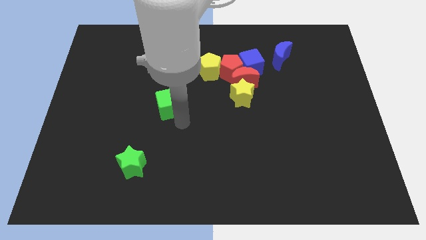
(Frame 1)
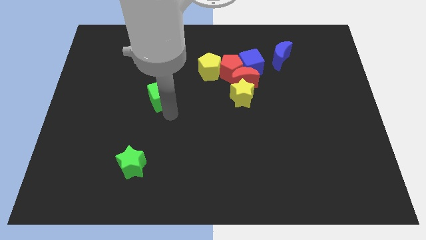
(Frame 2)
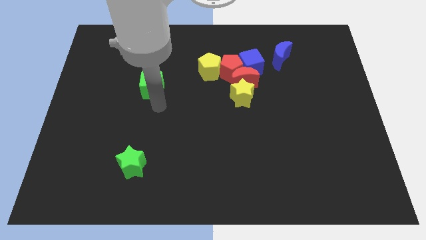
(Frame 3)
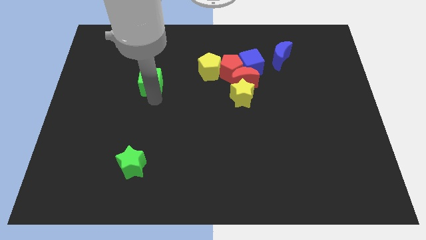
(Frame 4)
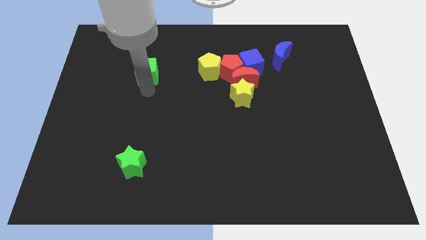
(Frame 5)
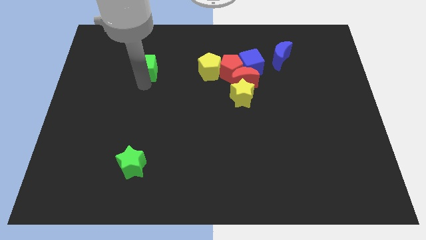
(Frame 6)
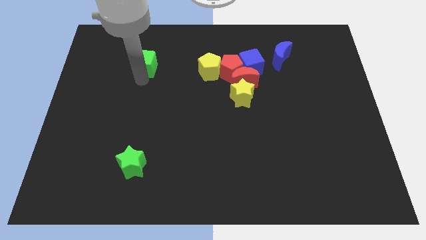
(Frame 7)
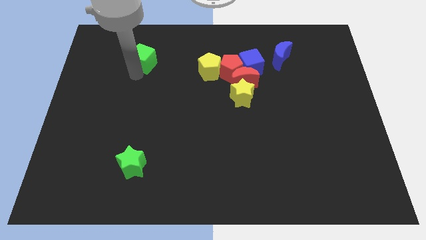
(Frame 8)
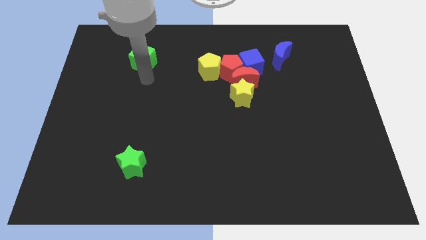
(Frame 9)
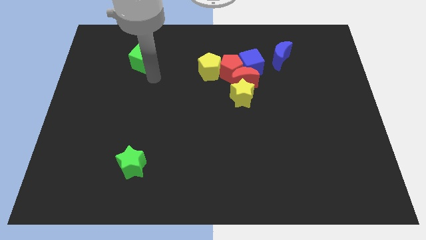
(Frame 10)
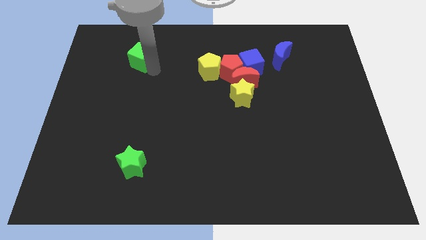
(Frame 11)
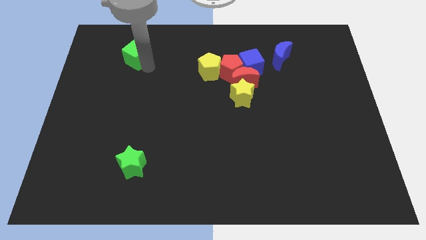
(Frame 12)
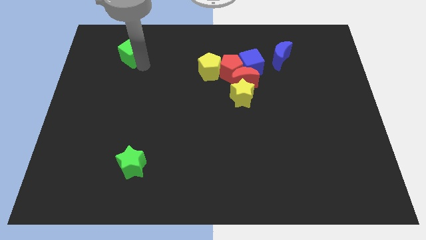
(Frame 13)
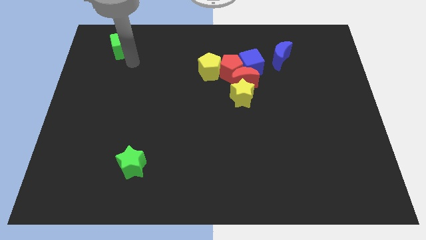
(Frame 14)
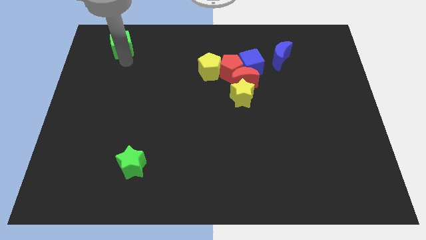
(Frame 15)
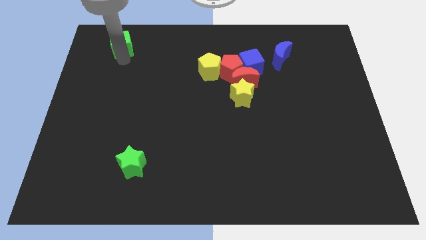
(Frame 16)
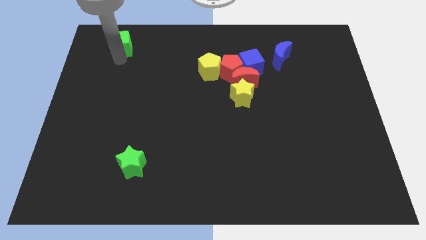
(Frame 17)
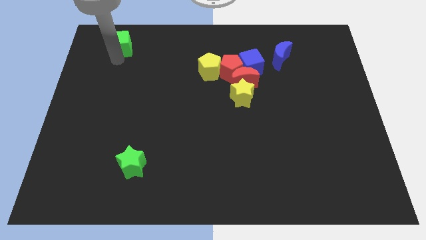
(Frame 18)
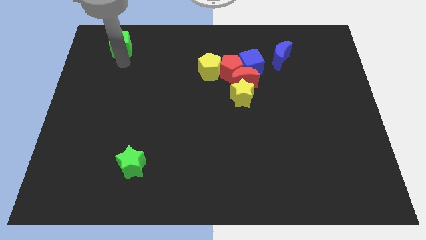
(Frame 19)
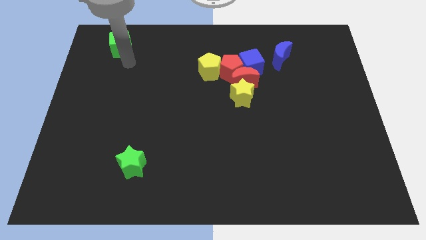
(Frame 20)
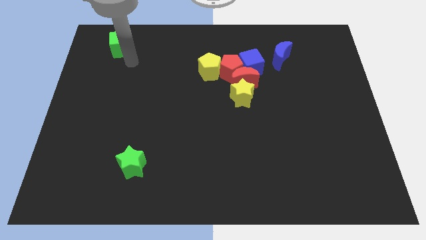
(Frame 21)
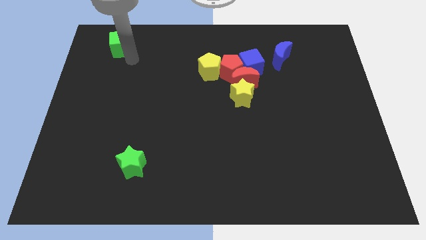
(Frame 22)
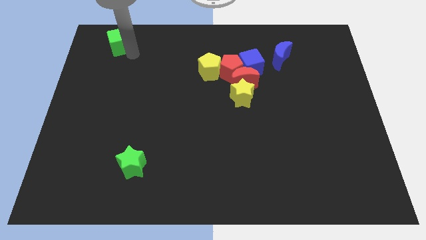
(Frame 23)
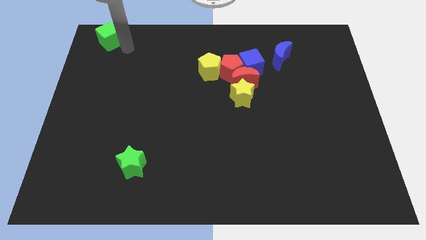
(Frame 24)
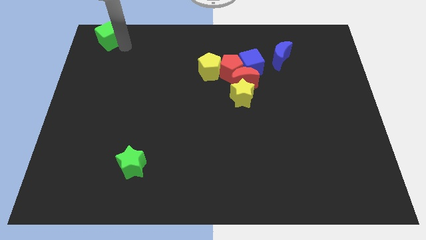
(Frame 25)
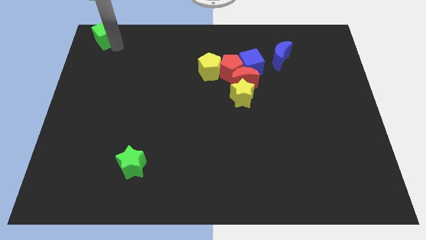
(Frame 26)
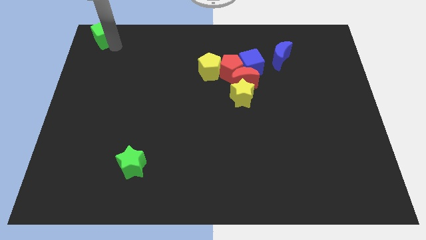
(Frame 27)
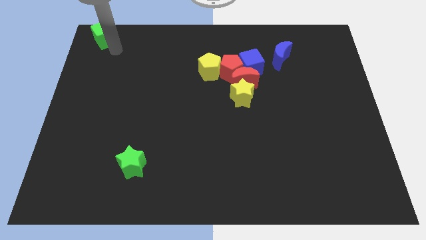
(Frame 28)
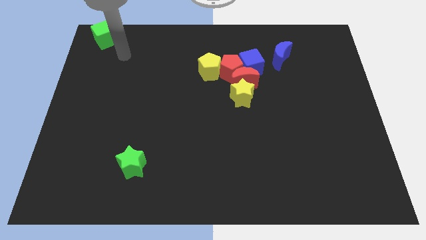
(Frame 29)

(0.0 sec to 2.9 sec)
place green cube at top left corner

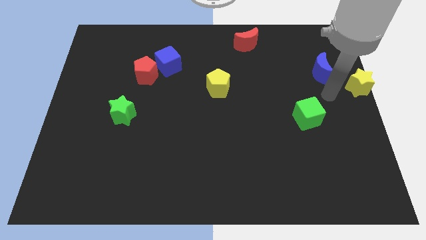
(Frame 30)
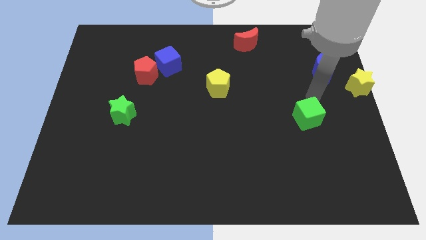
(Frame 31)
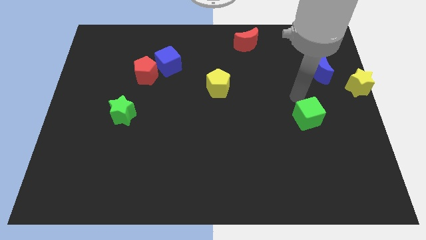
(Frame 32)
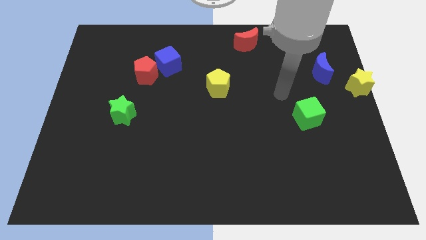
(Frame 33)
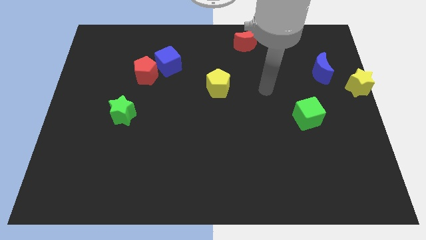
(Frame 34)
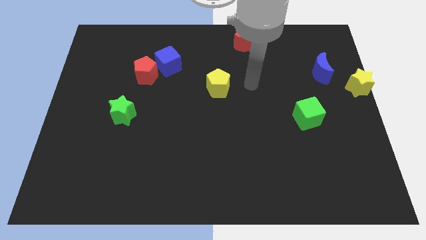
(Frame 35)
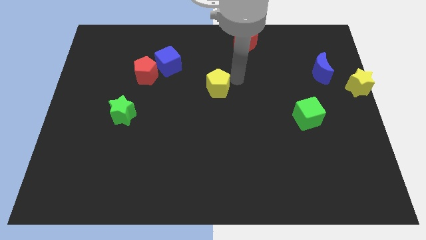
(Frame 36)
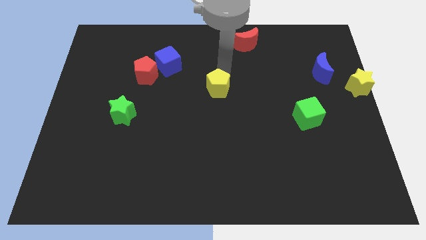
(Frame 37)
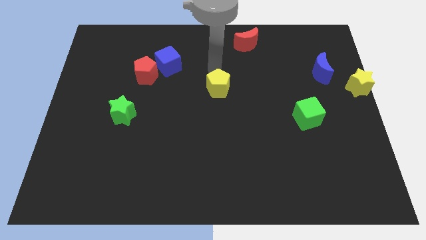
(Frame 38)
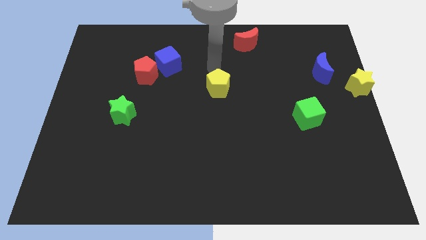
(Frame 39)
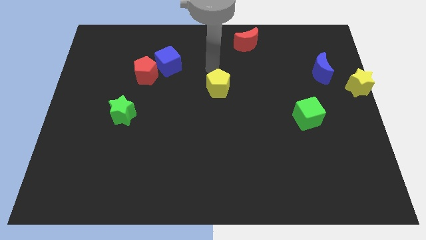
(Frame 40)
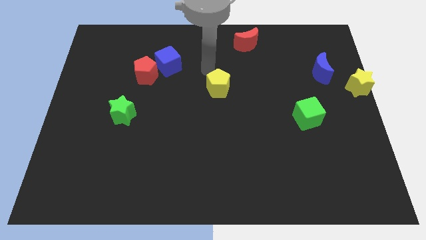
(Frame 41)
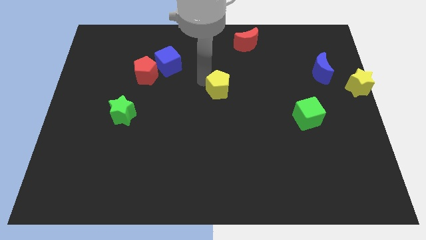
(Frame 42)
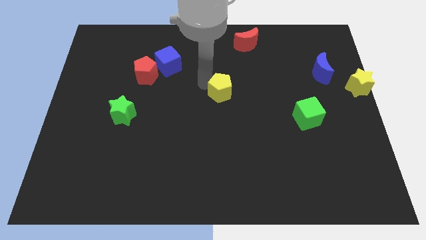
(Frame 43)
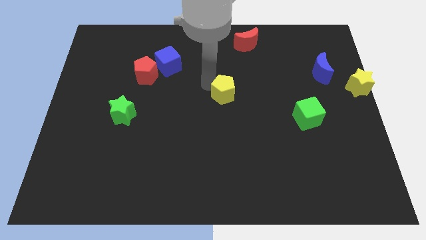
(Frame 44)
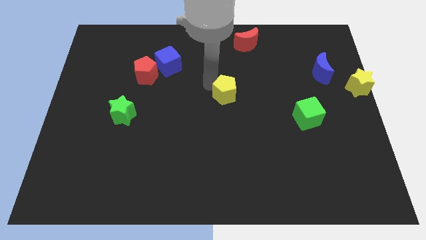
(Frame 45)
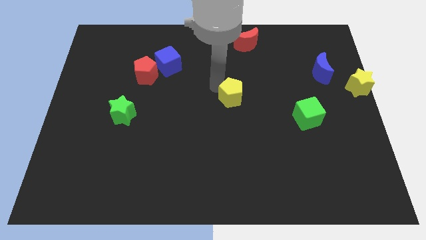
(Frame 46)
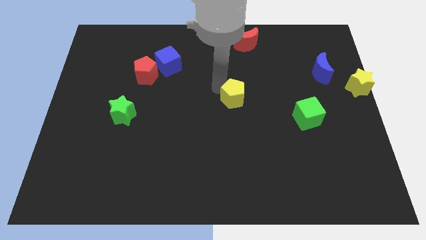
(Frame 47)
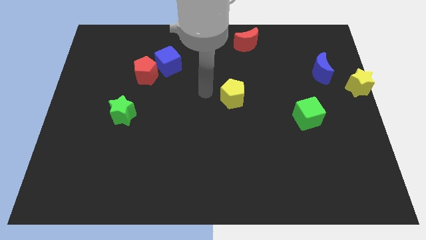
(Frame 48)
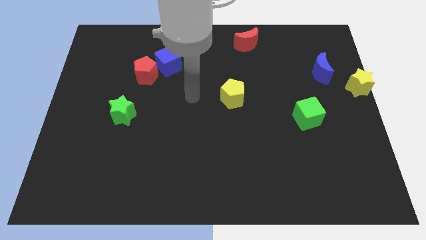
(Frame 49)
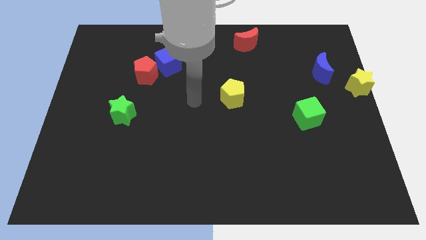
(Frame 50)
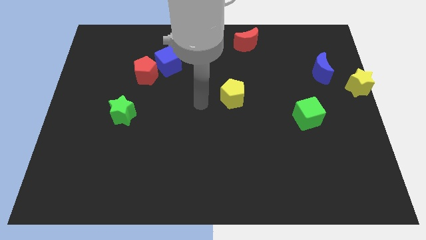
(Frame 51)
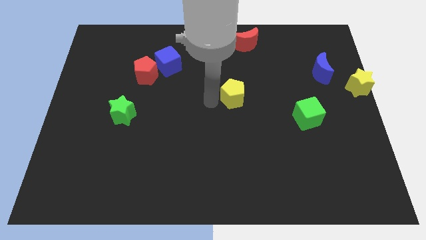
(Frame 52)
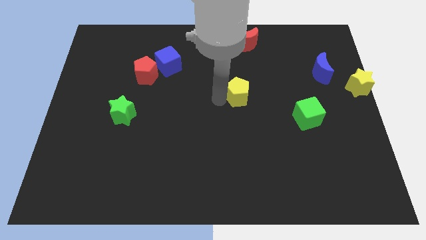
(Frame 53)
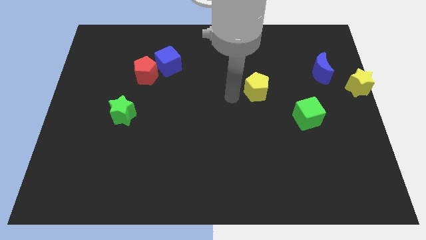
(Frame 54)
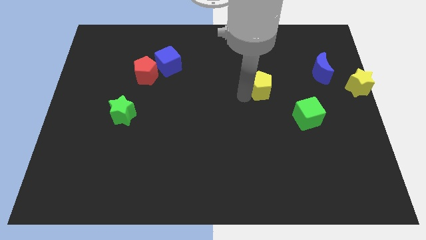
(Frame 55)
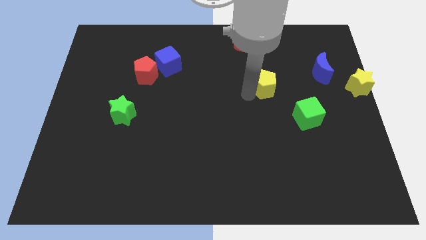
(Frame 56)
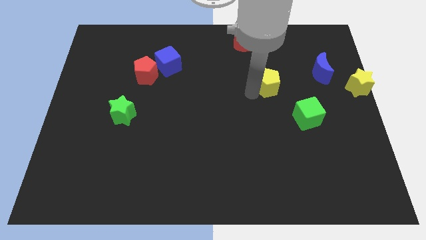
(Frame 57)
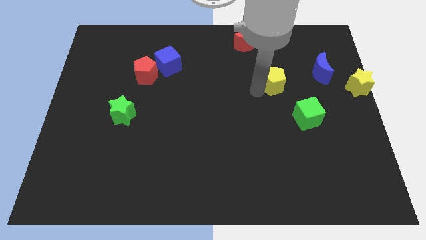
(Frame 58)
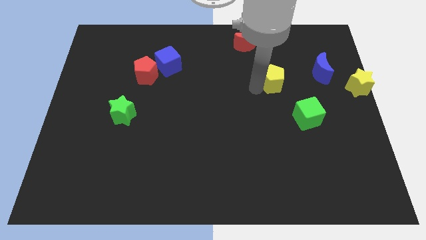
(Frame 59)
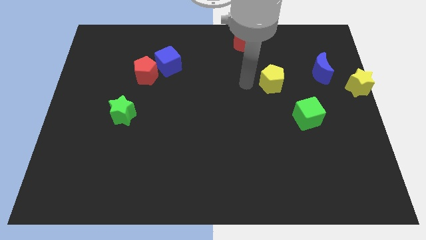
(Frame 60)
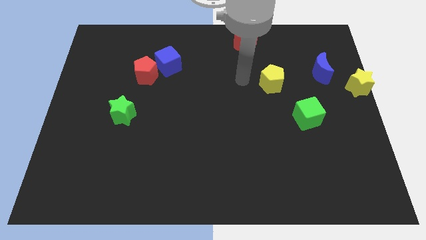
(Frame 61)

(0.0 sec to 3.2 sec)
move the yellow pentagon towards the yellow star

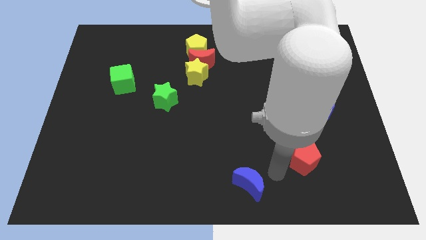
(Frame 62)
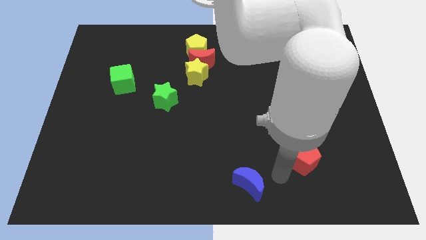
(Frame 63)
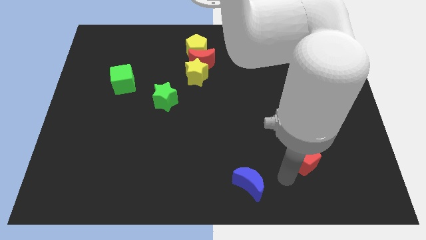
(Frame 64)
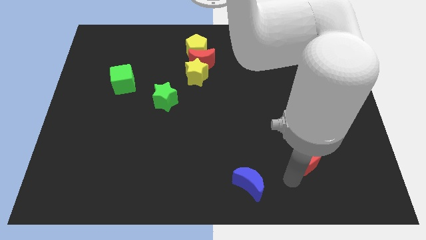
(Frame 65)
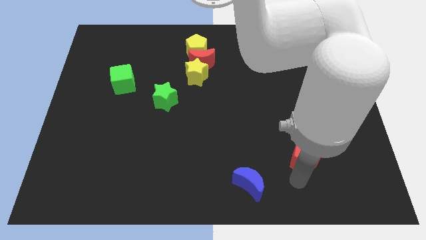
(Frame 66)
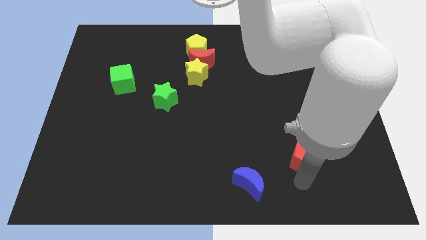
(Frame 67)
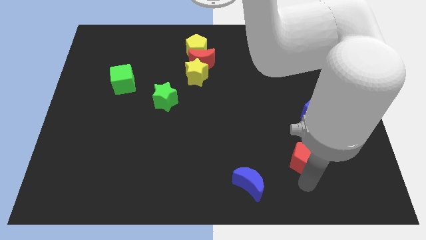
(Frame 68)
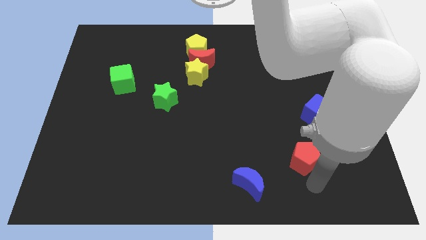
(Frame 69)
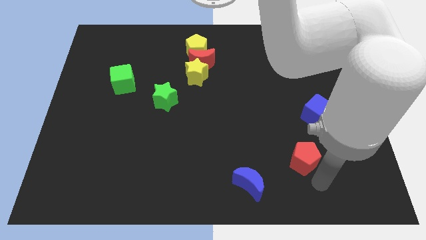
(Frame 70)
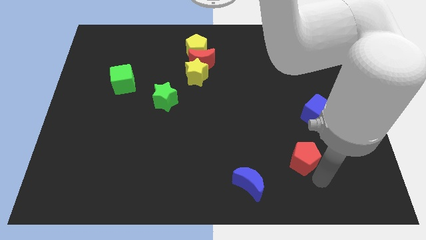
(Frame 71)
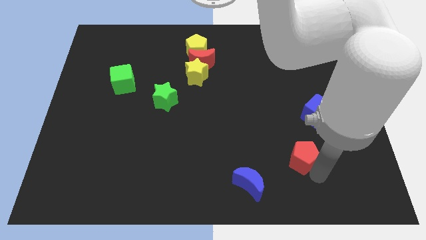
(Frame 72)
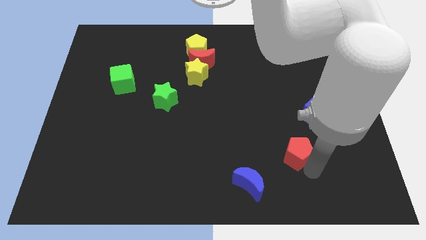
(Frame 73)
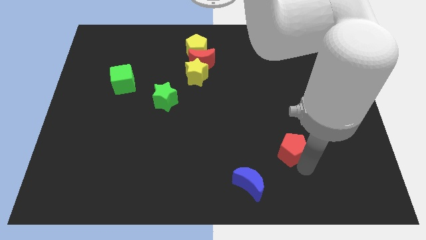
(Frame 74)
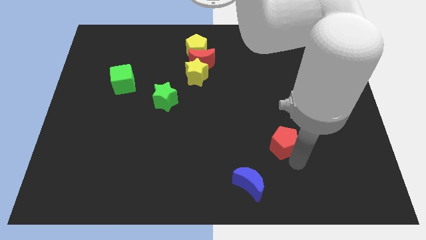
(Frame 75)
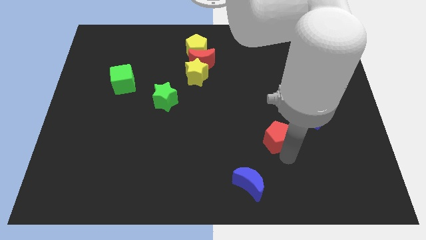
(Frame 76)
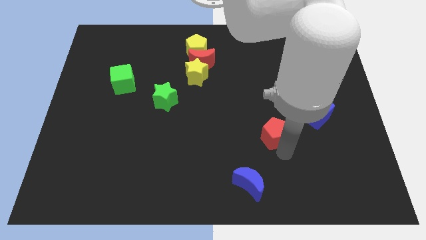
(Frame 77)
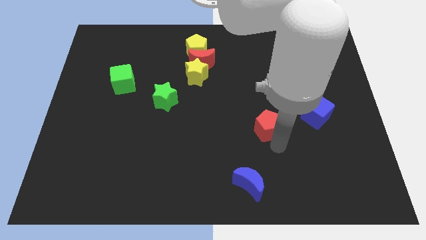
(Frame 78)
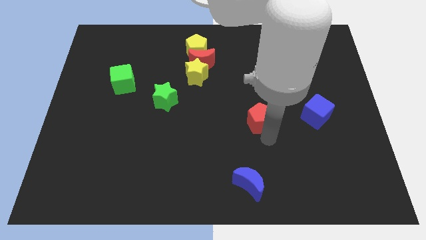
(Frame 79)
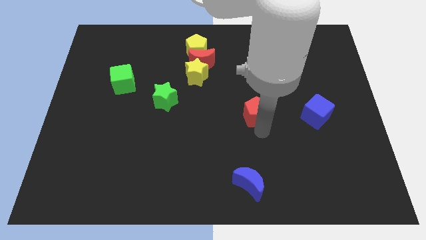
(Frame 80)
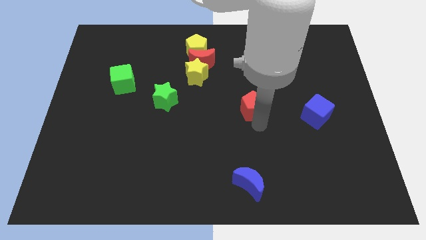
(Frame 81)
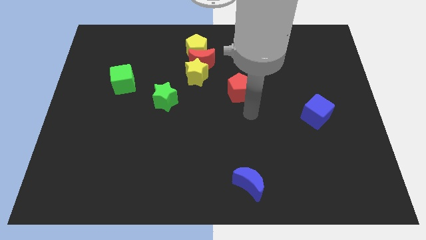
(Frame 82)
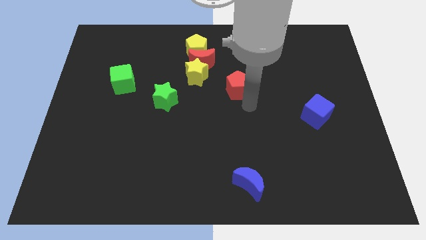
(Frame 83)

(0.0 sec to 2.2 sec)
move the red pentagon vertically above the blue moon

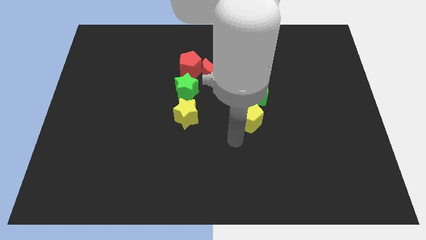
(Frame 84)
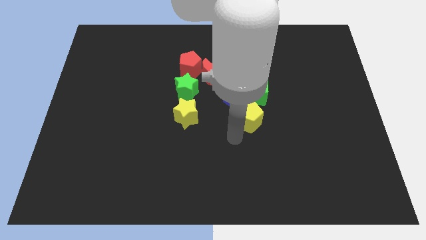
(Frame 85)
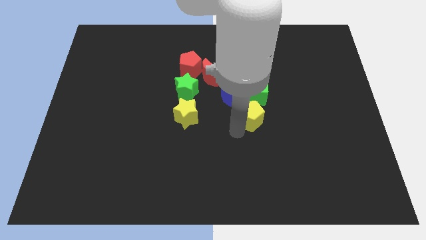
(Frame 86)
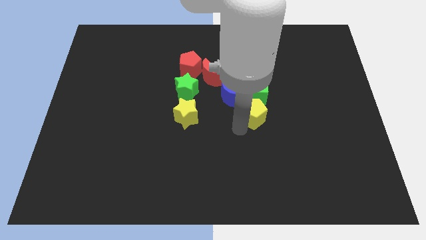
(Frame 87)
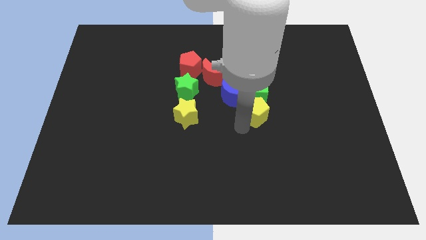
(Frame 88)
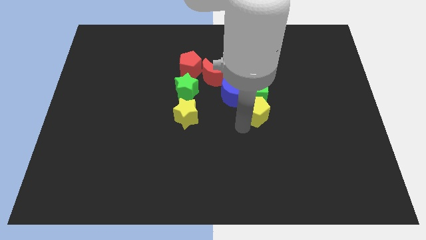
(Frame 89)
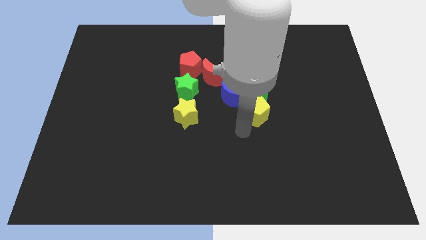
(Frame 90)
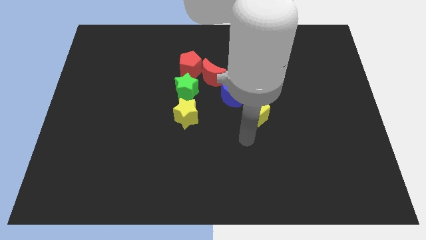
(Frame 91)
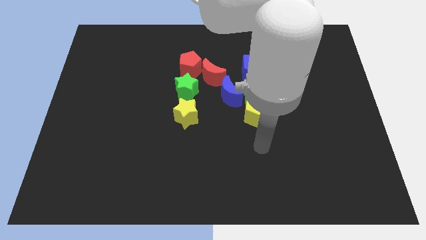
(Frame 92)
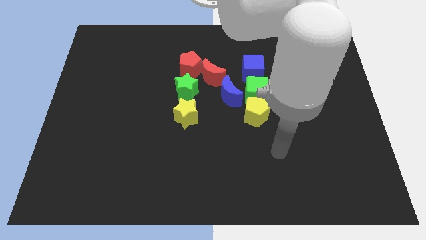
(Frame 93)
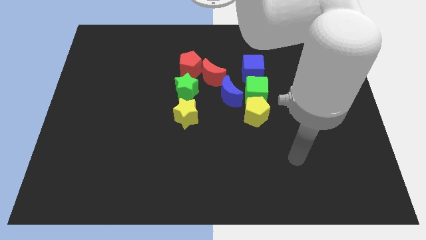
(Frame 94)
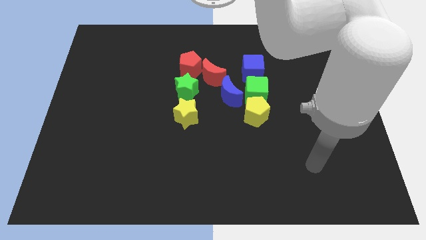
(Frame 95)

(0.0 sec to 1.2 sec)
slightly move the yellow pentagon below the green cube
